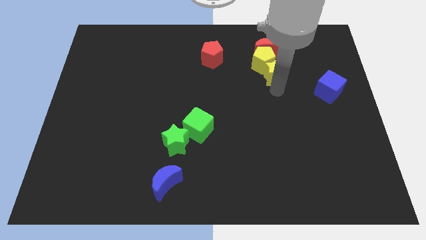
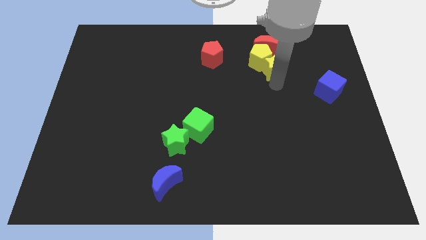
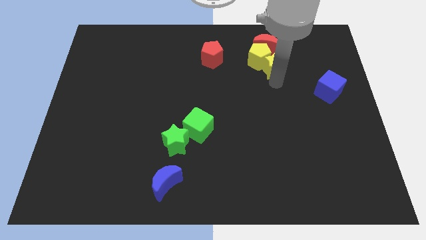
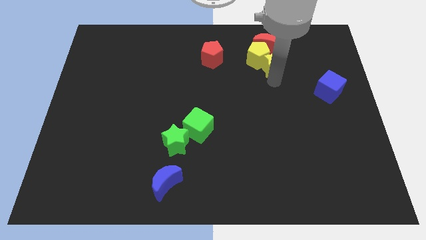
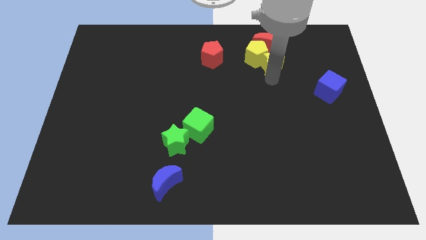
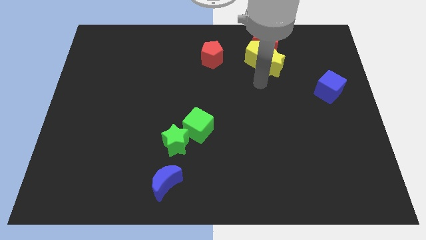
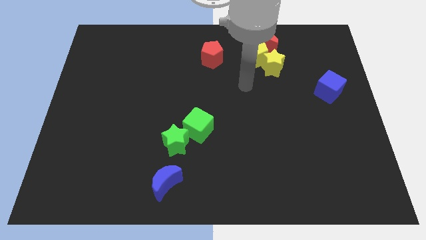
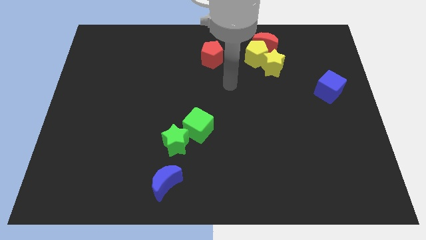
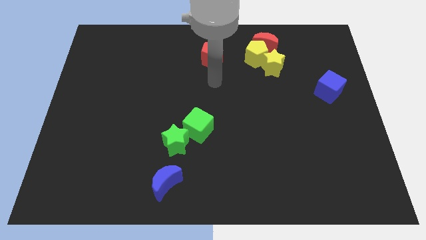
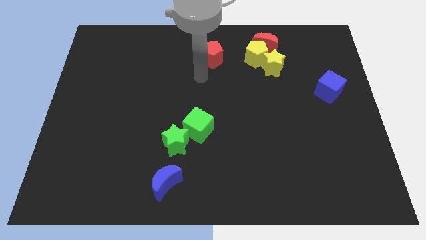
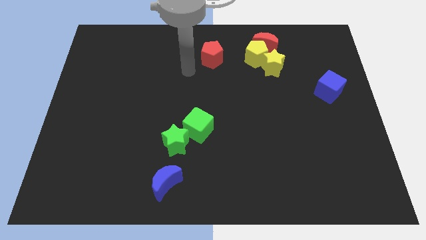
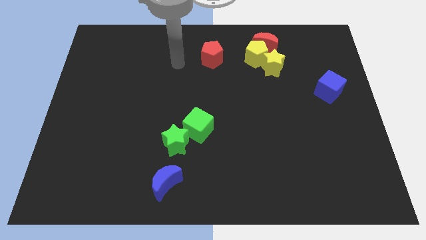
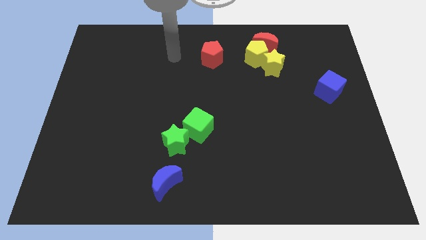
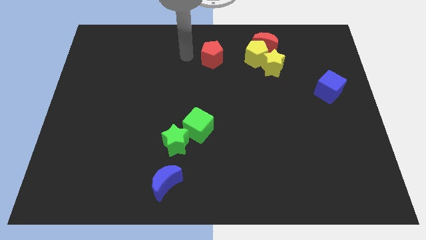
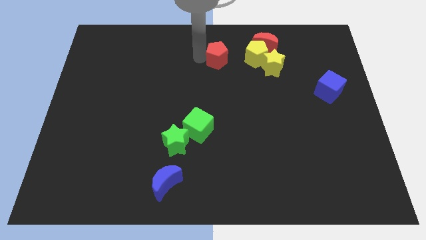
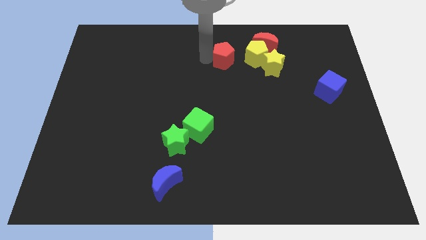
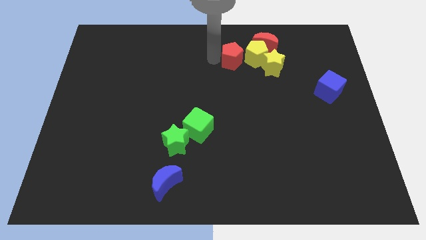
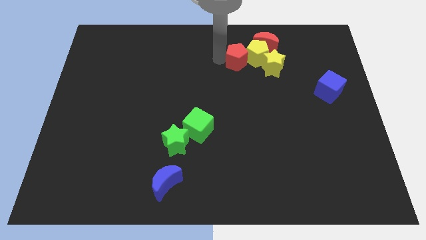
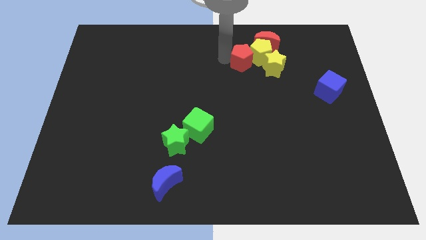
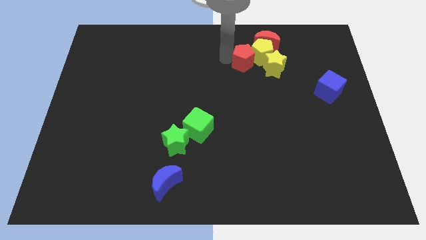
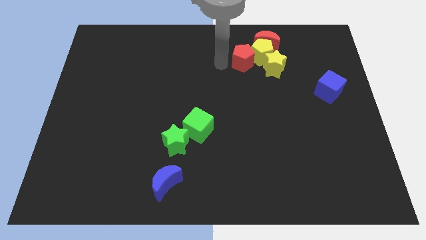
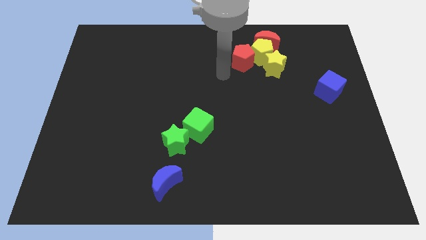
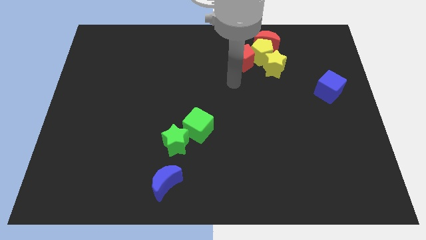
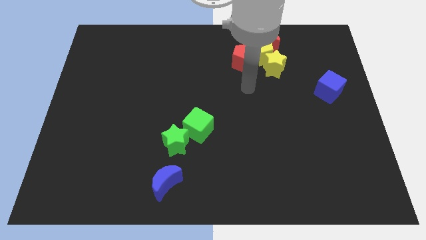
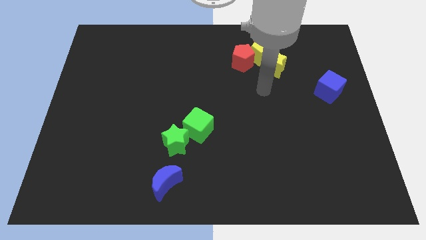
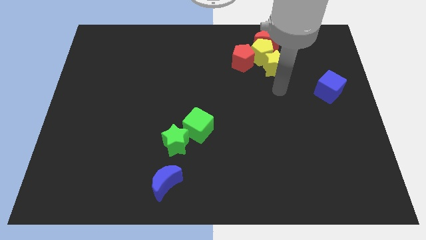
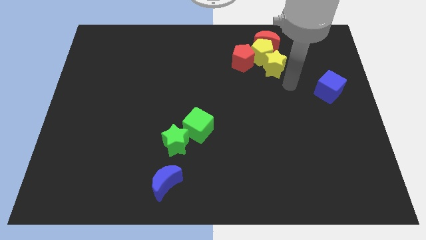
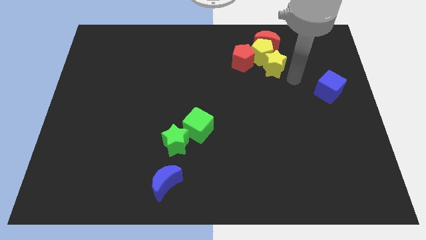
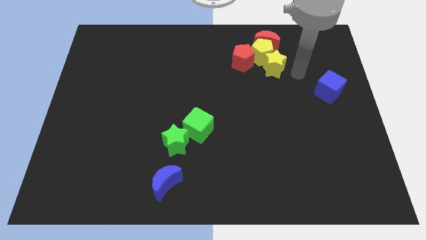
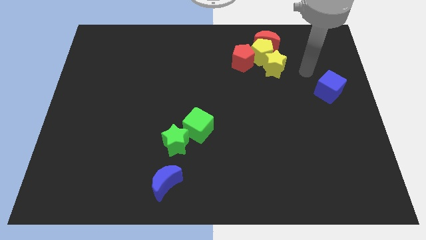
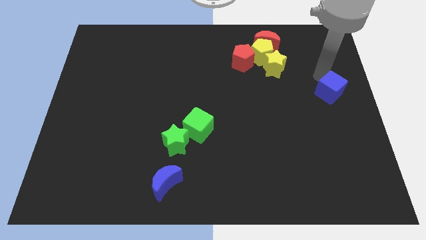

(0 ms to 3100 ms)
put the red pentagon on the left side of the yellow pentagon

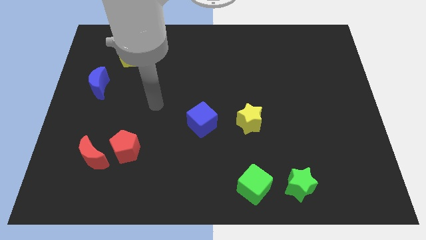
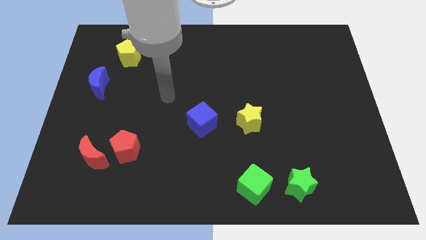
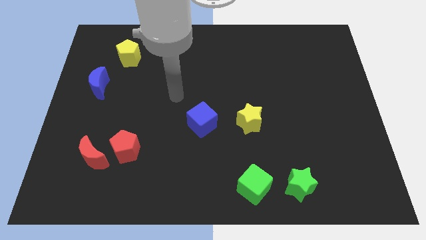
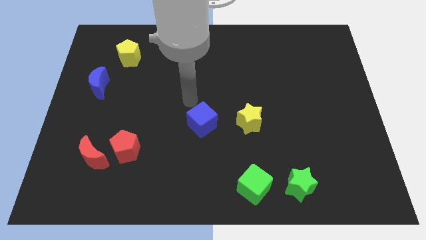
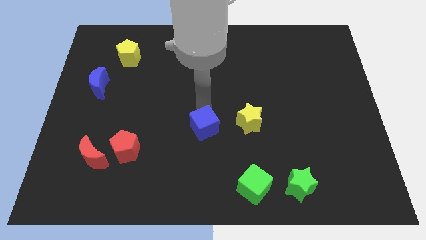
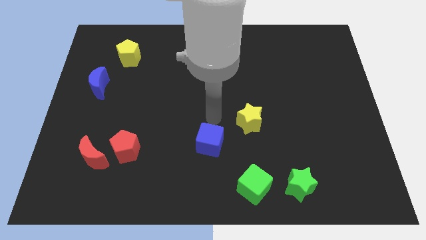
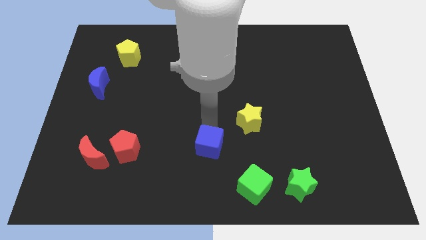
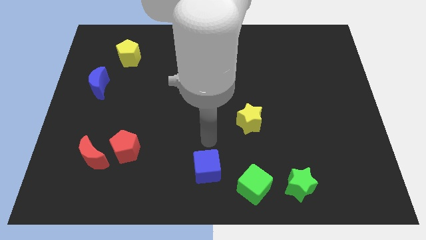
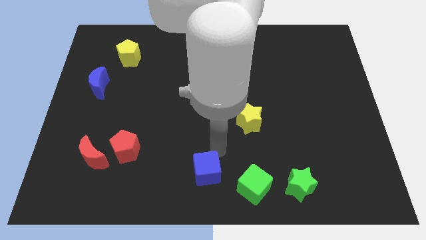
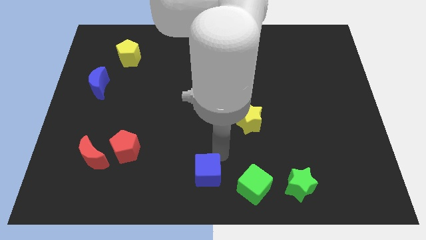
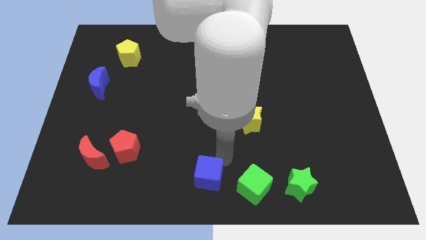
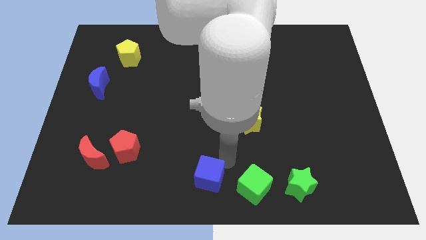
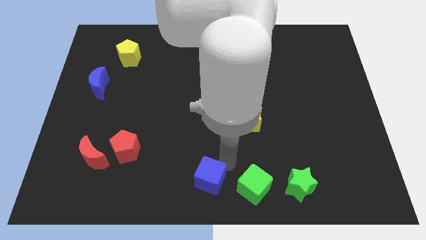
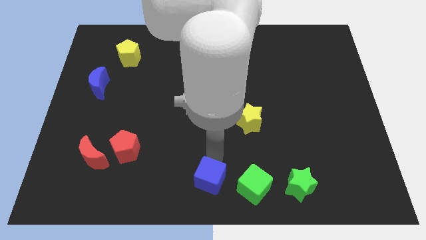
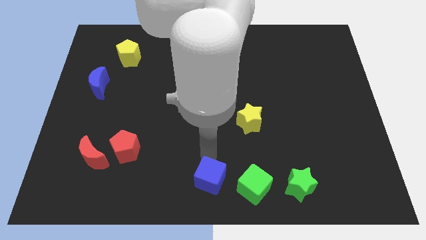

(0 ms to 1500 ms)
push the blue cube to the left side of the green cube

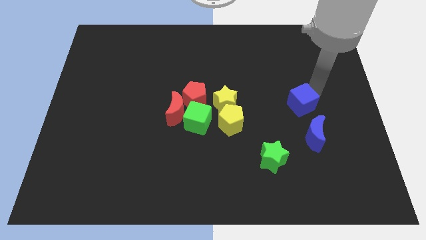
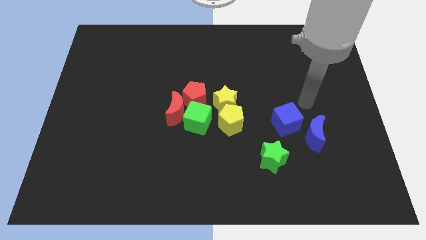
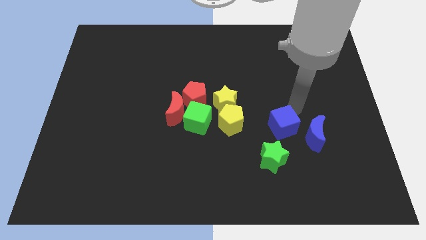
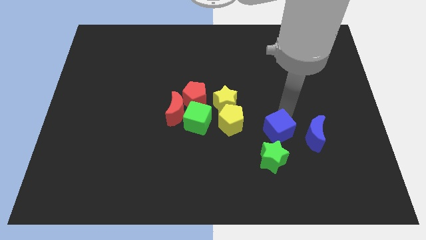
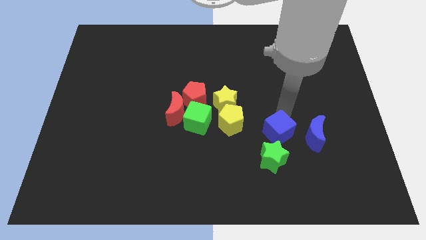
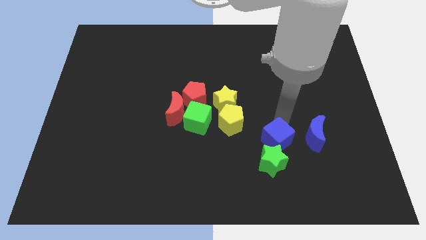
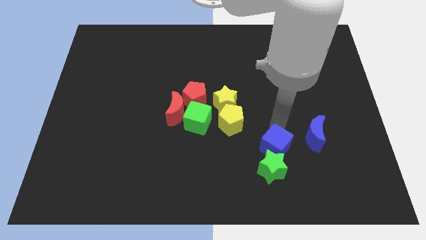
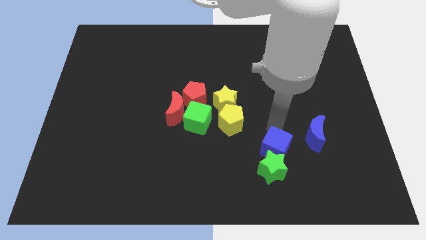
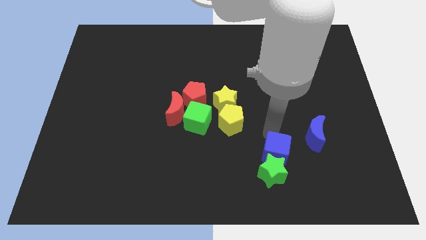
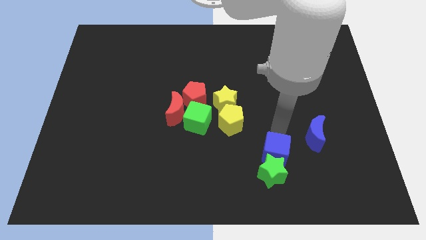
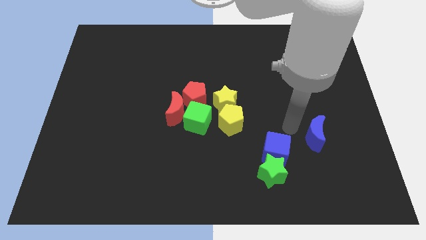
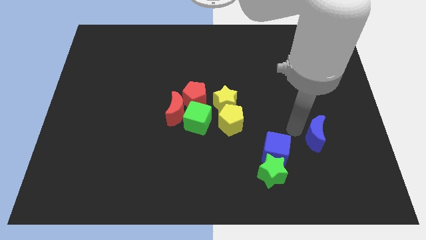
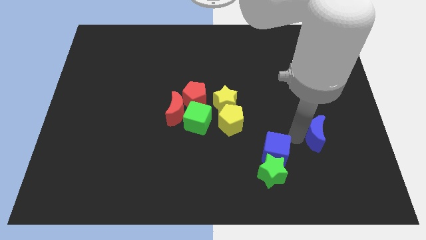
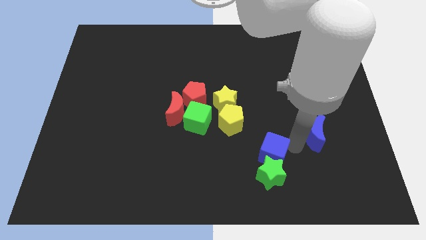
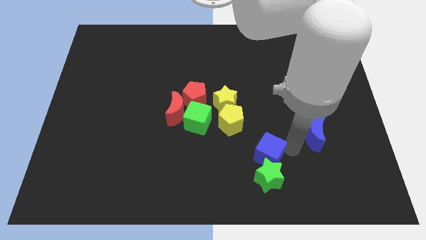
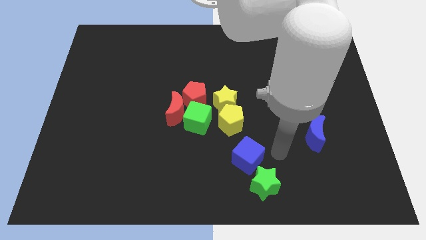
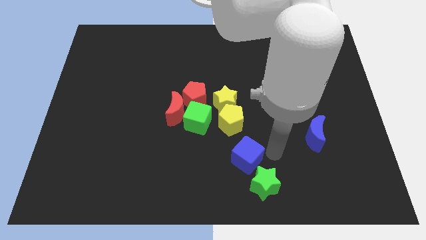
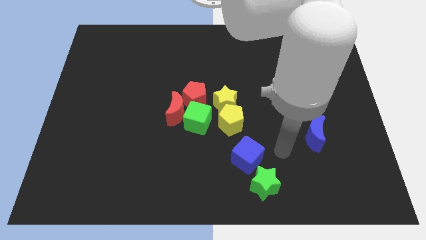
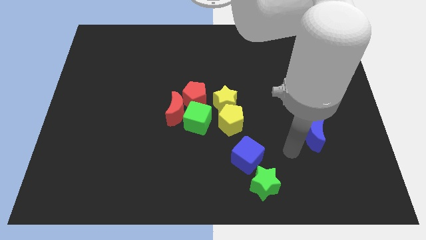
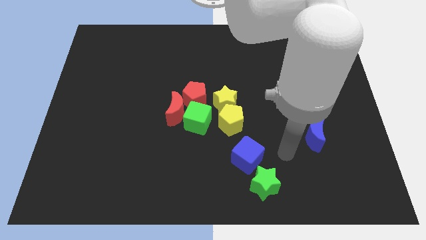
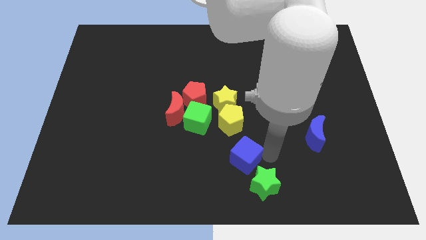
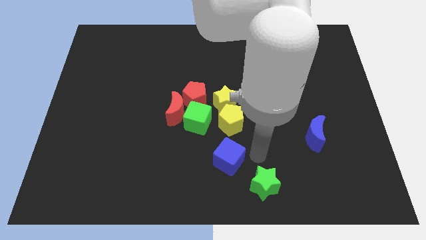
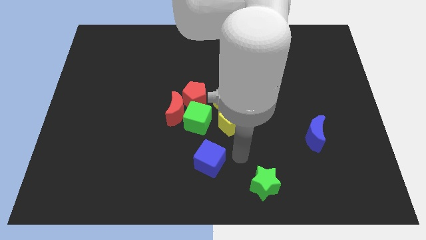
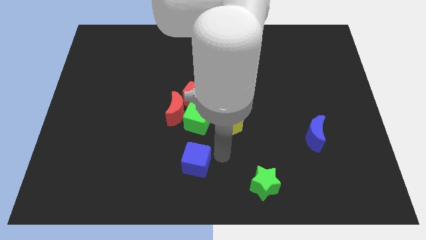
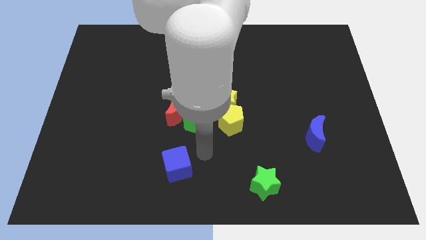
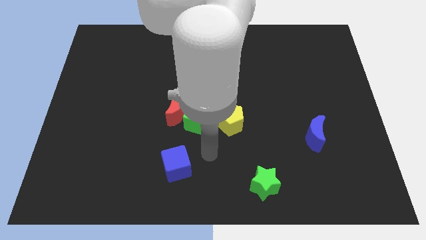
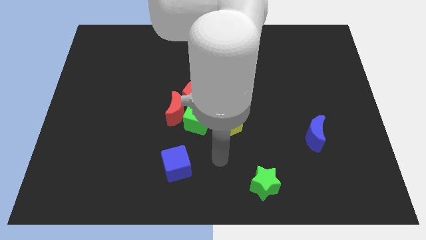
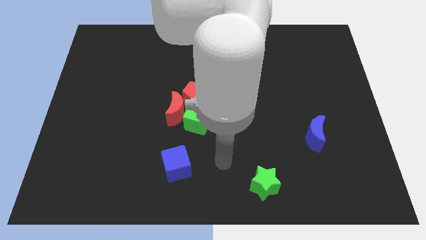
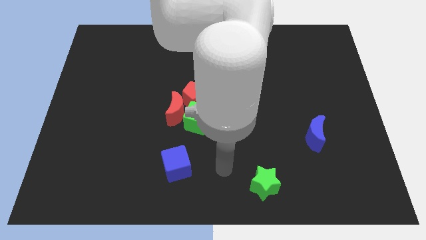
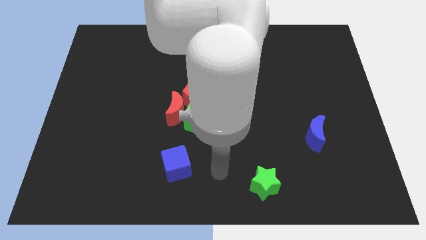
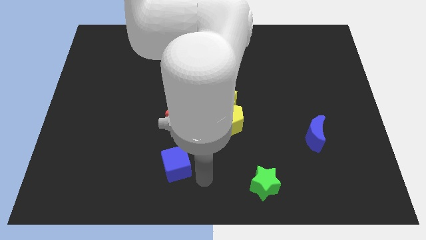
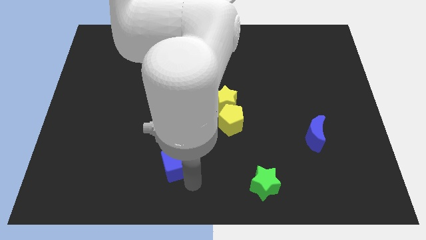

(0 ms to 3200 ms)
place the blue cube to the bottom center of the board

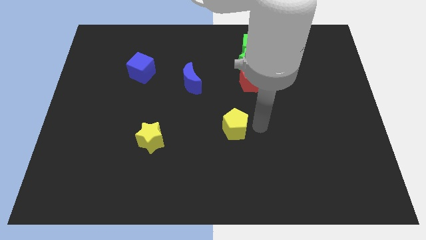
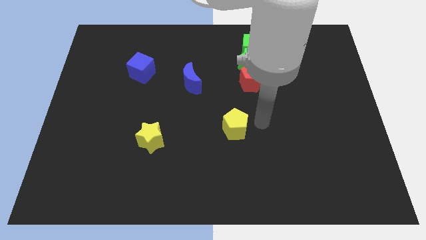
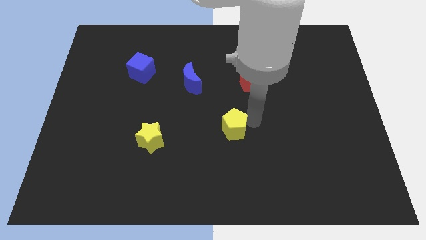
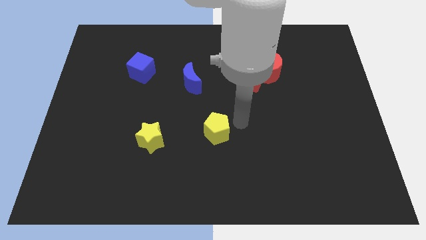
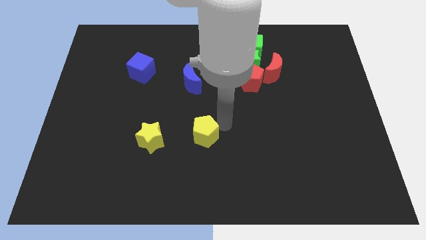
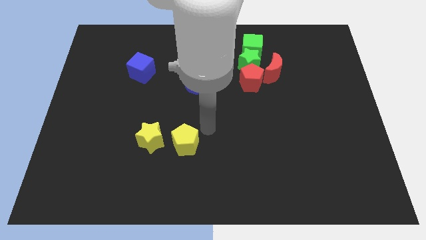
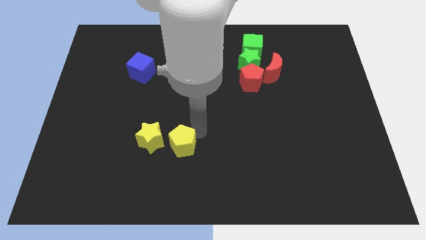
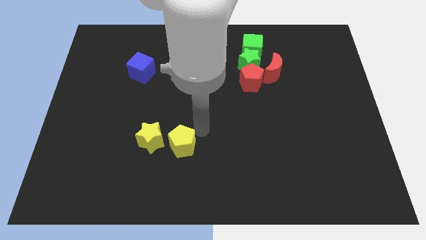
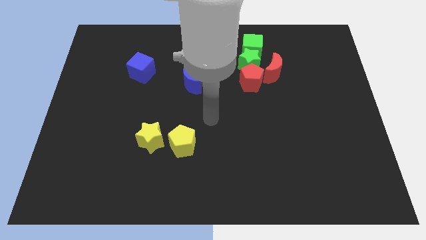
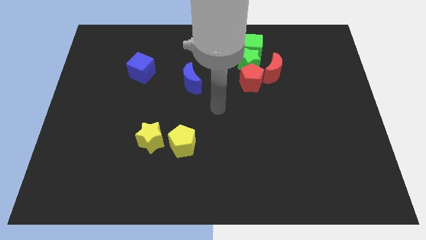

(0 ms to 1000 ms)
move yellow pentagon right beside the yellow star

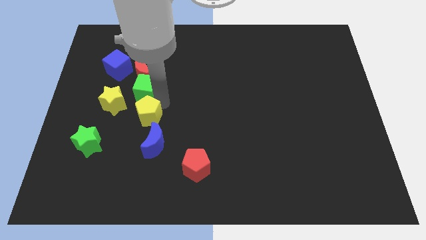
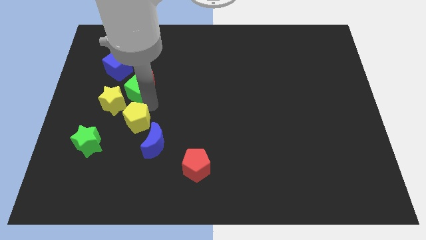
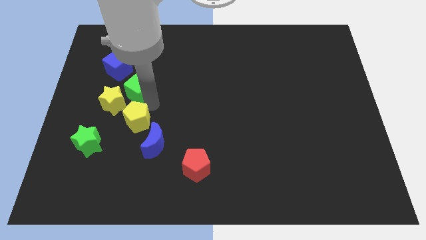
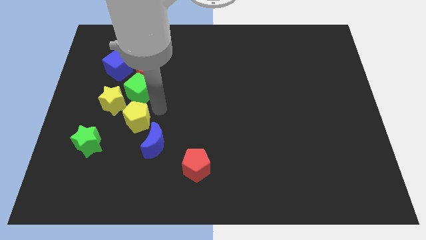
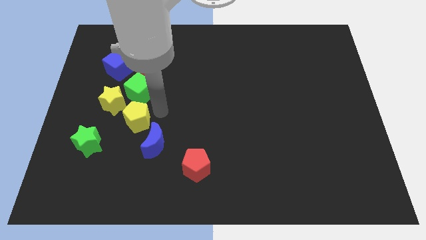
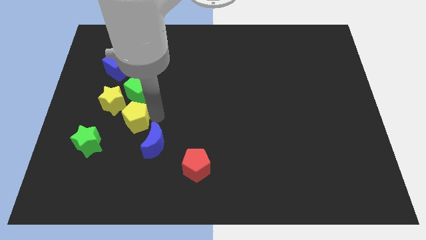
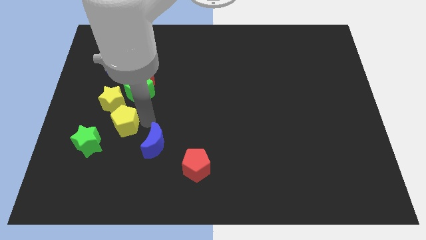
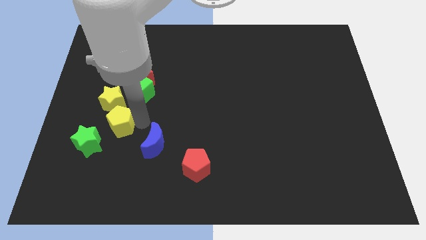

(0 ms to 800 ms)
push the yellow pentagon close to the yellow star
